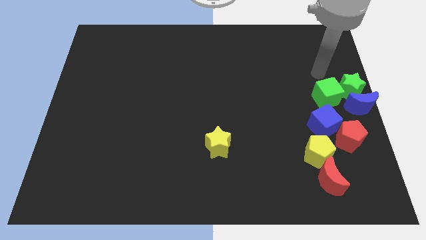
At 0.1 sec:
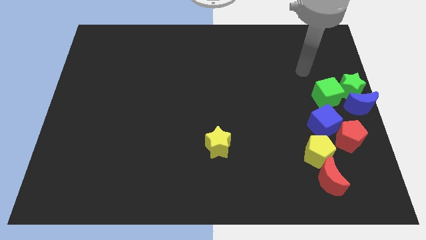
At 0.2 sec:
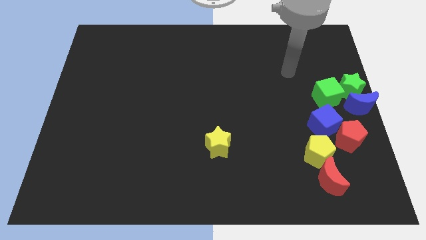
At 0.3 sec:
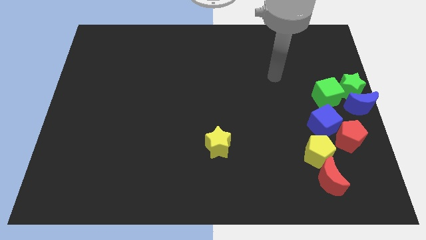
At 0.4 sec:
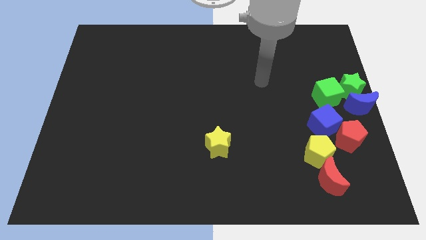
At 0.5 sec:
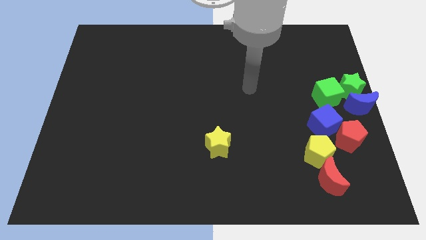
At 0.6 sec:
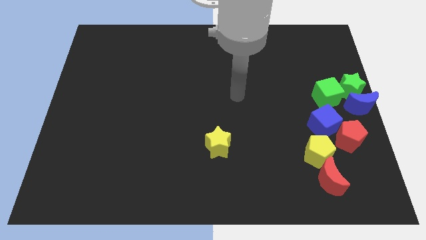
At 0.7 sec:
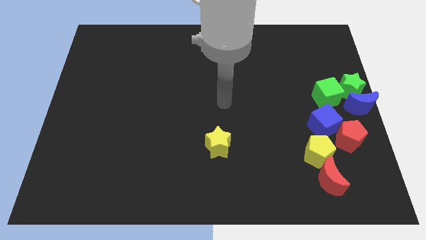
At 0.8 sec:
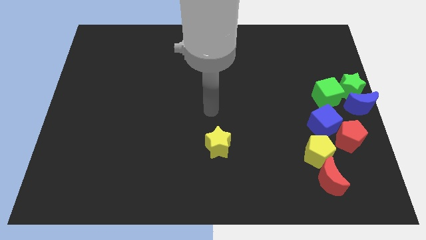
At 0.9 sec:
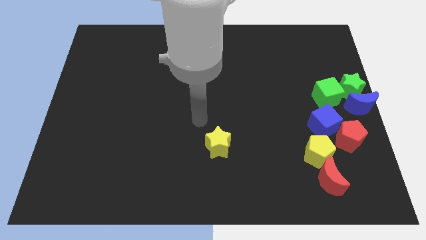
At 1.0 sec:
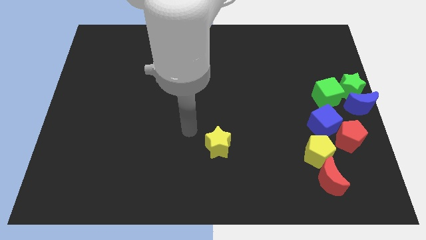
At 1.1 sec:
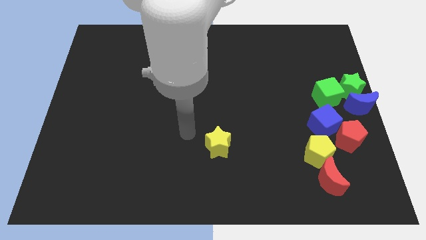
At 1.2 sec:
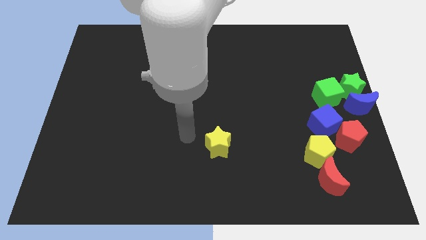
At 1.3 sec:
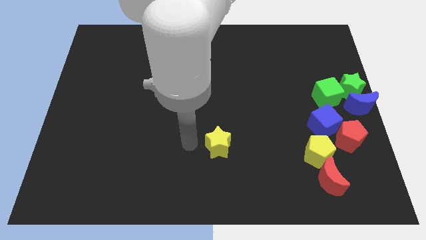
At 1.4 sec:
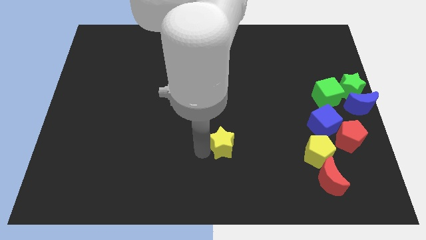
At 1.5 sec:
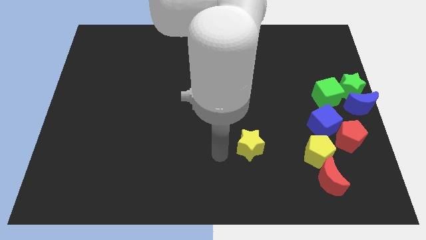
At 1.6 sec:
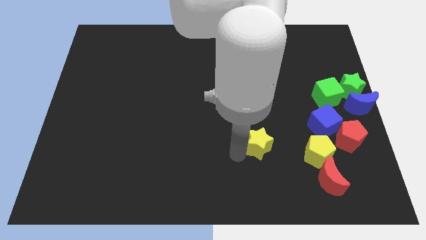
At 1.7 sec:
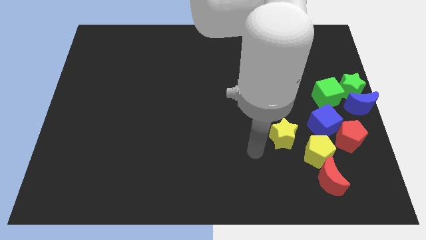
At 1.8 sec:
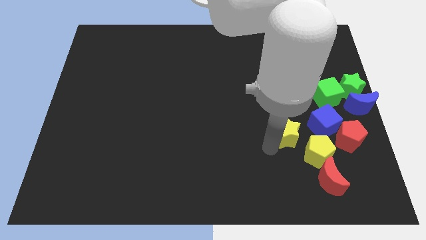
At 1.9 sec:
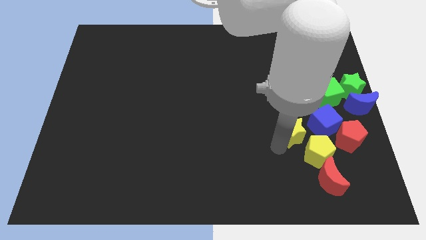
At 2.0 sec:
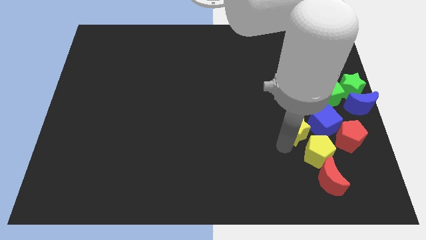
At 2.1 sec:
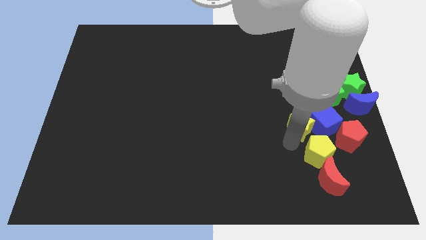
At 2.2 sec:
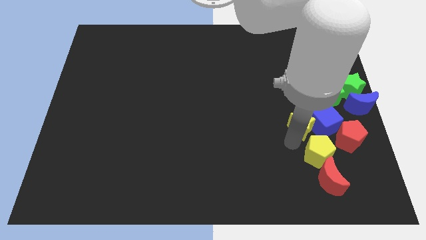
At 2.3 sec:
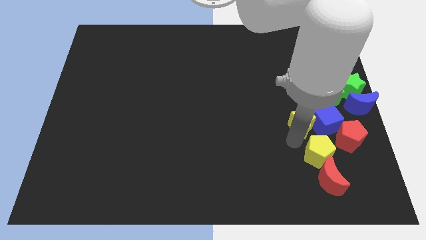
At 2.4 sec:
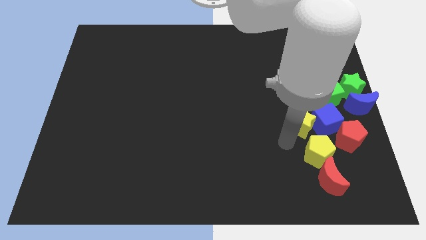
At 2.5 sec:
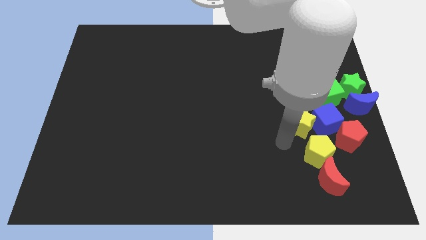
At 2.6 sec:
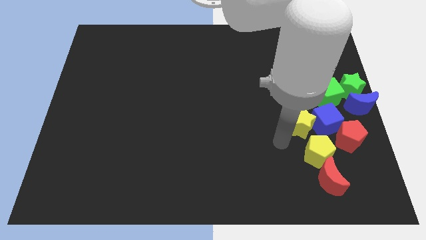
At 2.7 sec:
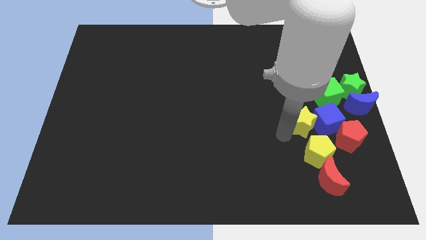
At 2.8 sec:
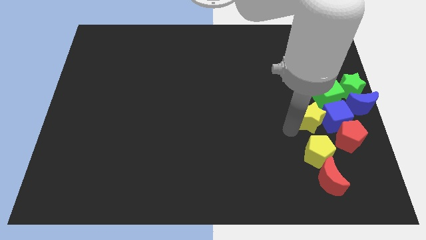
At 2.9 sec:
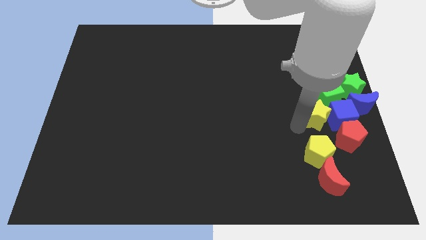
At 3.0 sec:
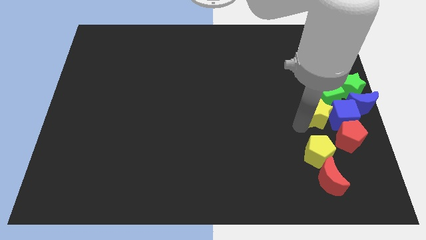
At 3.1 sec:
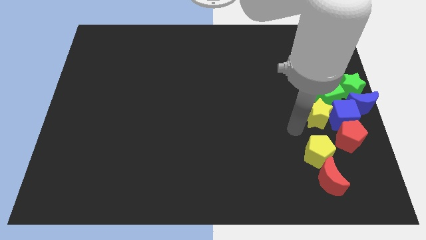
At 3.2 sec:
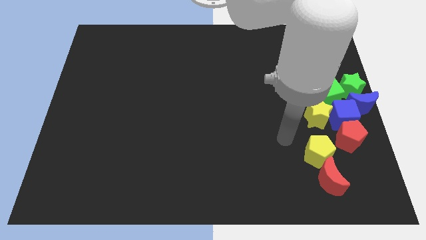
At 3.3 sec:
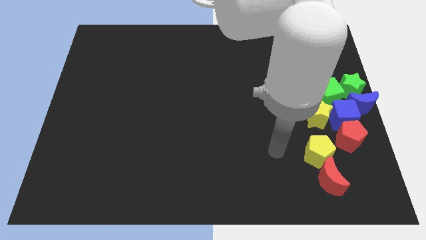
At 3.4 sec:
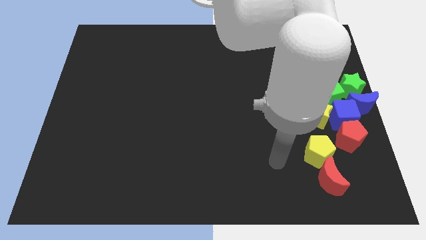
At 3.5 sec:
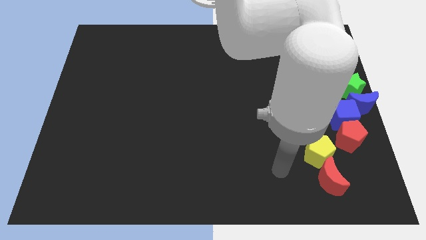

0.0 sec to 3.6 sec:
push the yellow star into blue cube

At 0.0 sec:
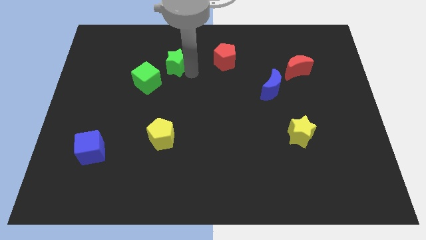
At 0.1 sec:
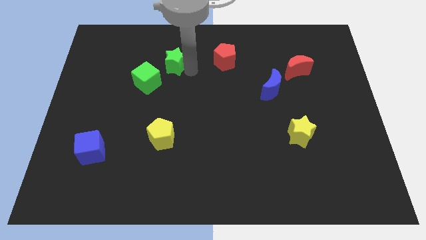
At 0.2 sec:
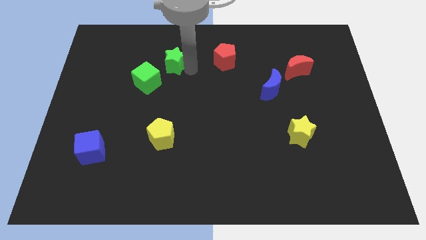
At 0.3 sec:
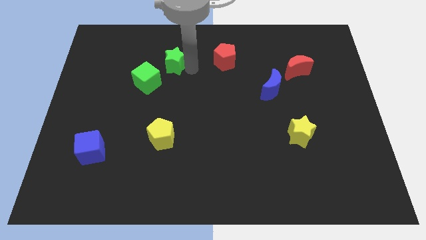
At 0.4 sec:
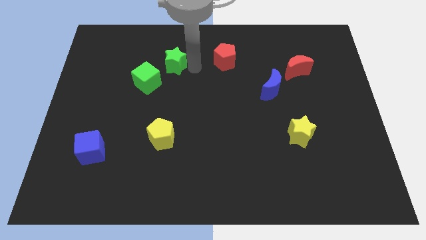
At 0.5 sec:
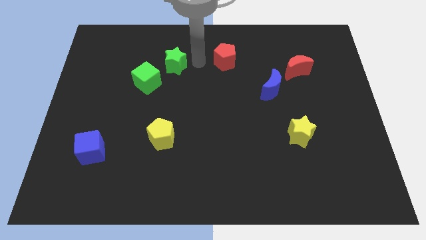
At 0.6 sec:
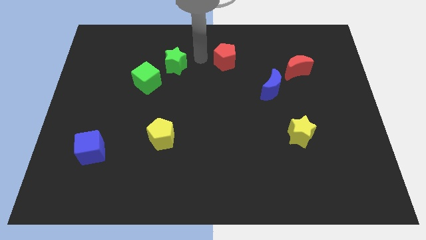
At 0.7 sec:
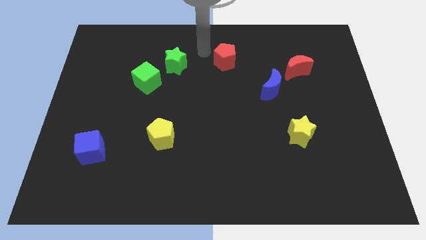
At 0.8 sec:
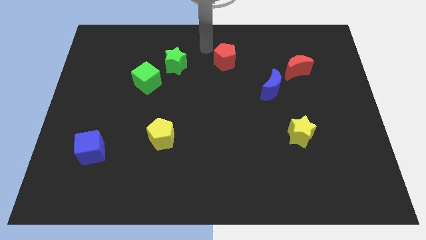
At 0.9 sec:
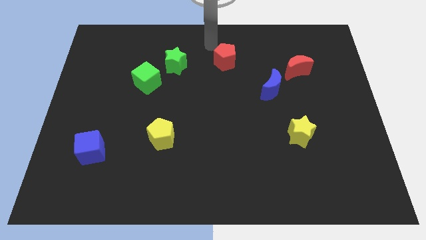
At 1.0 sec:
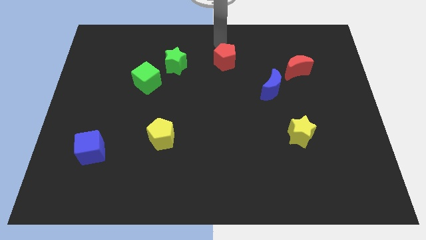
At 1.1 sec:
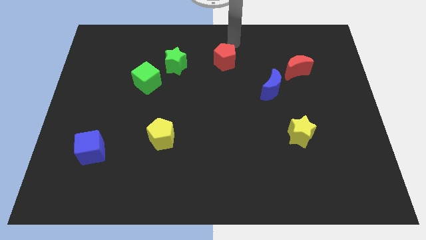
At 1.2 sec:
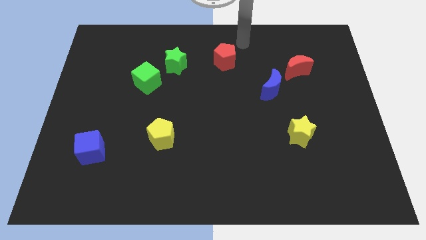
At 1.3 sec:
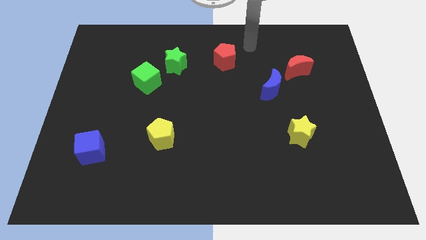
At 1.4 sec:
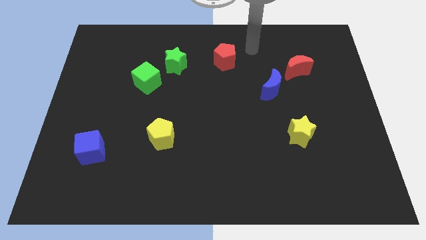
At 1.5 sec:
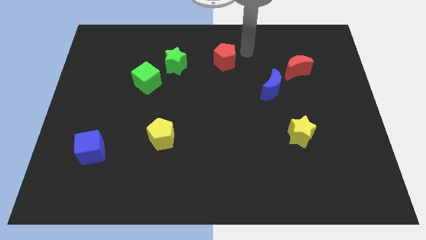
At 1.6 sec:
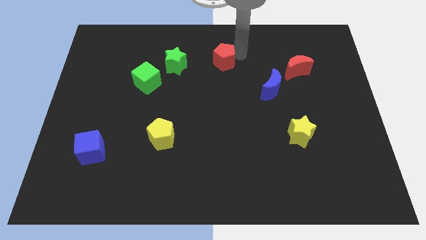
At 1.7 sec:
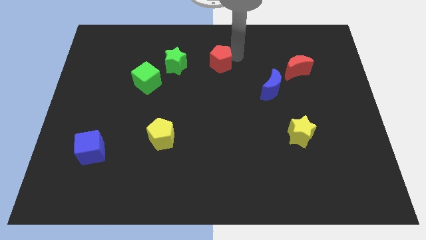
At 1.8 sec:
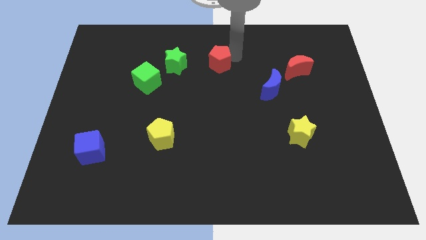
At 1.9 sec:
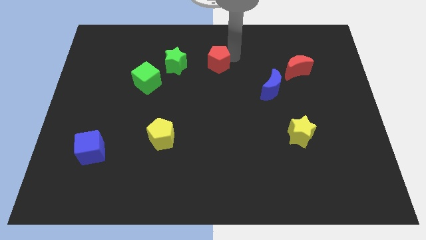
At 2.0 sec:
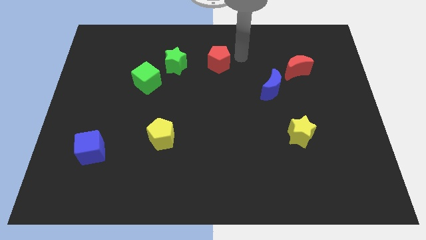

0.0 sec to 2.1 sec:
push red pentagon slightly towards down

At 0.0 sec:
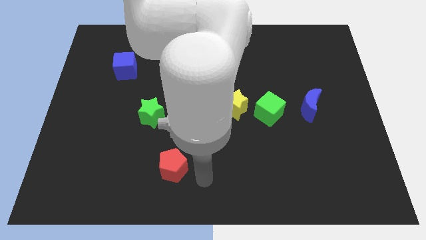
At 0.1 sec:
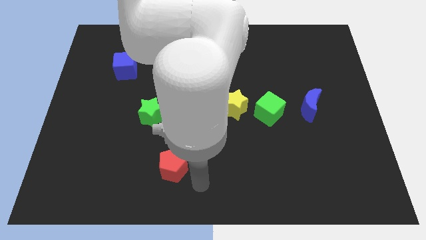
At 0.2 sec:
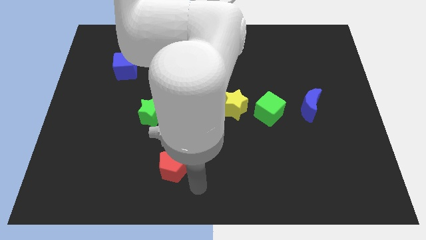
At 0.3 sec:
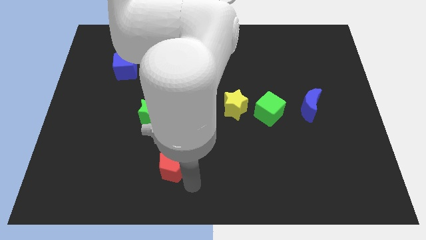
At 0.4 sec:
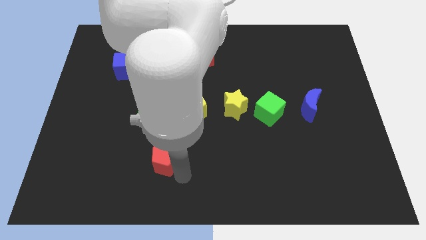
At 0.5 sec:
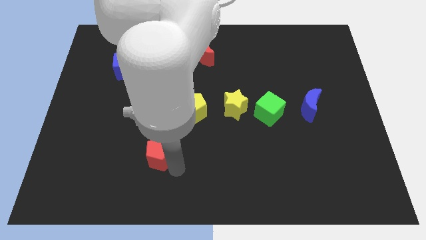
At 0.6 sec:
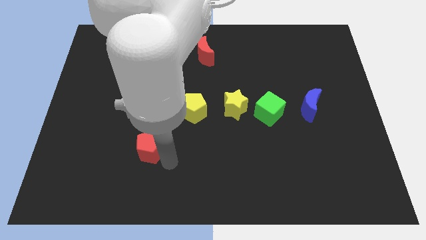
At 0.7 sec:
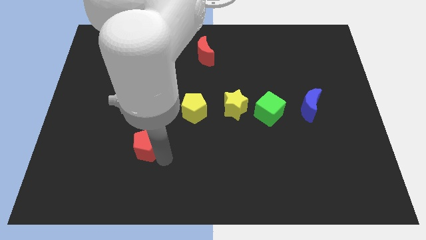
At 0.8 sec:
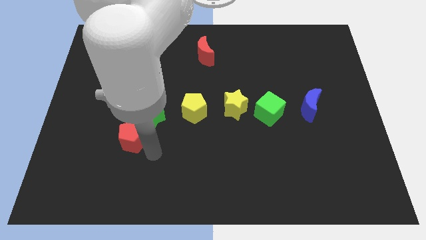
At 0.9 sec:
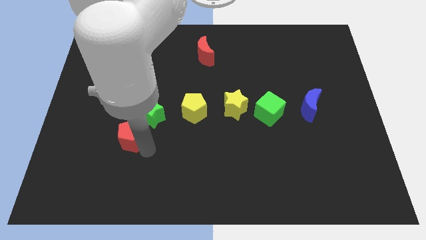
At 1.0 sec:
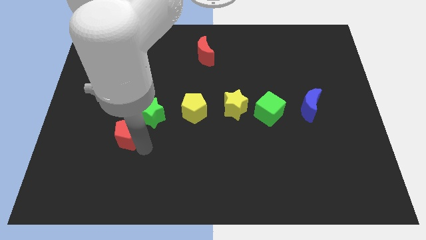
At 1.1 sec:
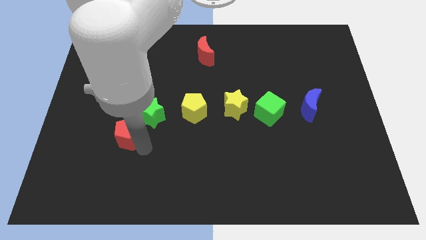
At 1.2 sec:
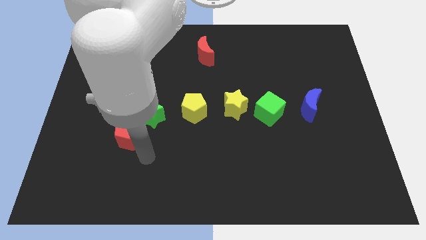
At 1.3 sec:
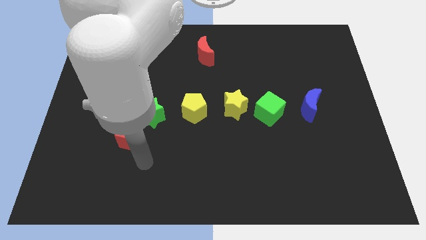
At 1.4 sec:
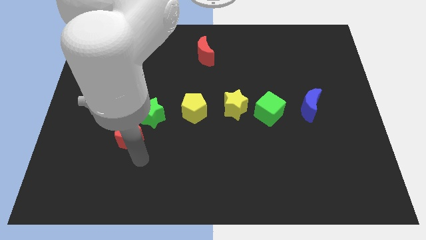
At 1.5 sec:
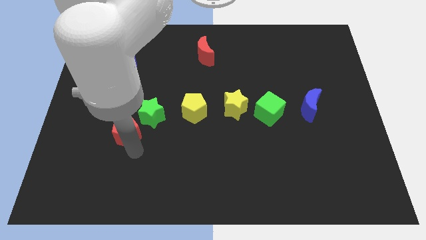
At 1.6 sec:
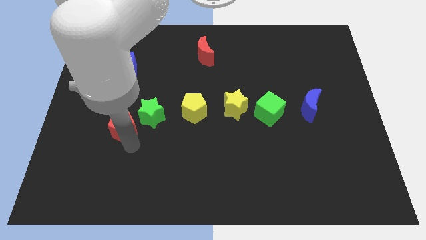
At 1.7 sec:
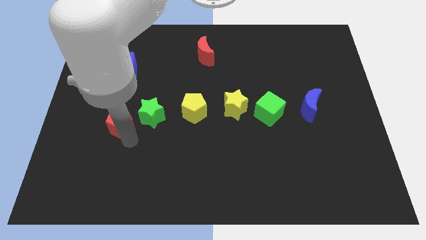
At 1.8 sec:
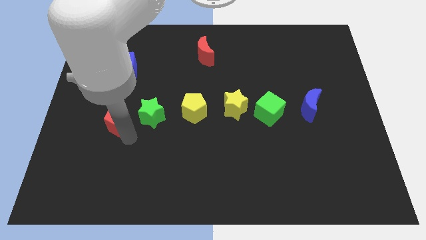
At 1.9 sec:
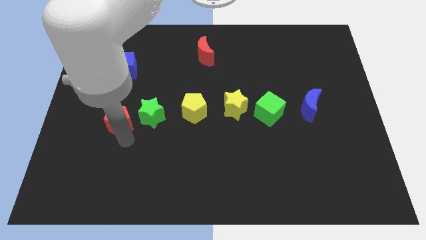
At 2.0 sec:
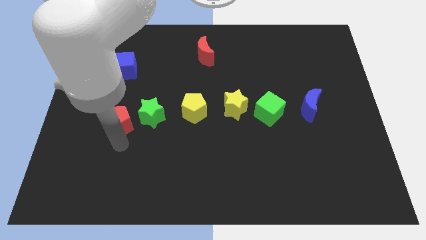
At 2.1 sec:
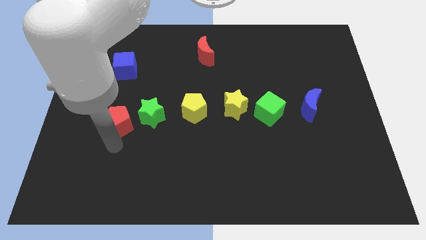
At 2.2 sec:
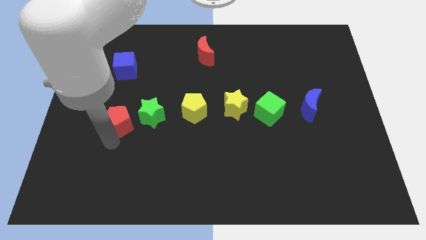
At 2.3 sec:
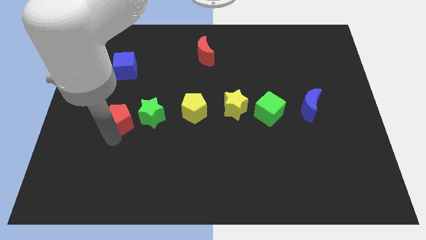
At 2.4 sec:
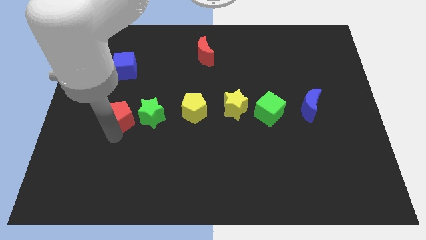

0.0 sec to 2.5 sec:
move the red pentagon to the left of the green star

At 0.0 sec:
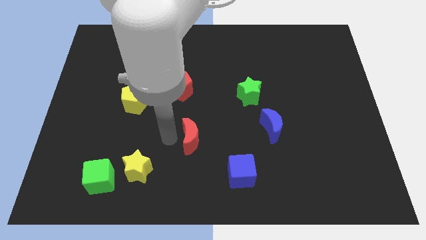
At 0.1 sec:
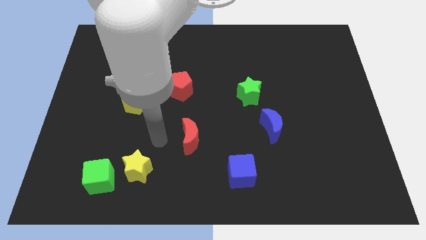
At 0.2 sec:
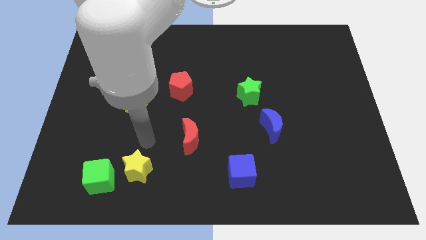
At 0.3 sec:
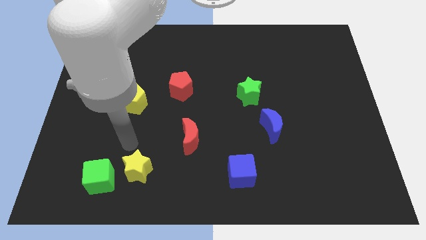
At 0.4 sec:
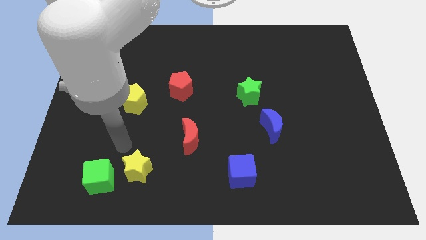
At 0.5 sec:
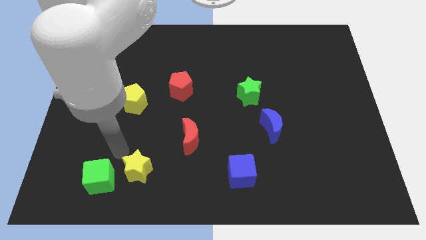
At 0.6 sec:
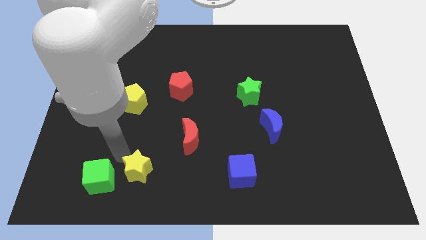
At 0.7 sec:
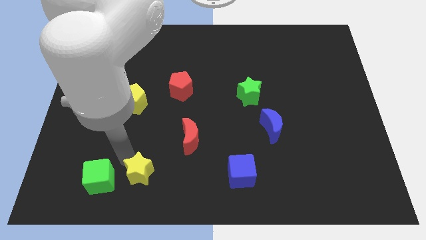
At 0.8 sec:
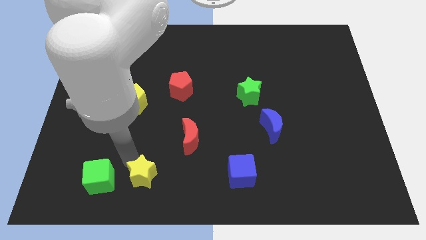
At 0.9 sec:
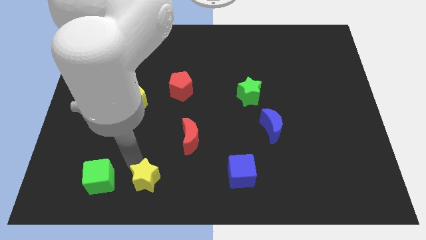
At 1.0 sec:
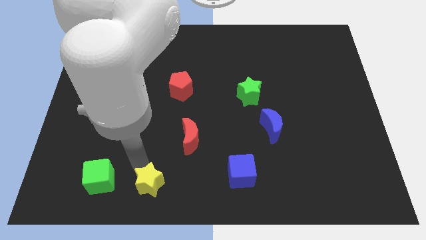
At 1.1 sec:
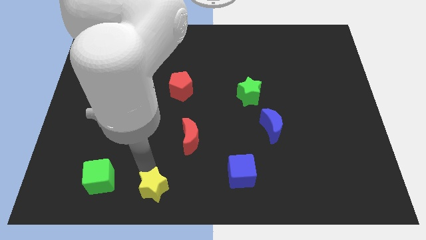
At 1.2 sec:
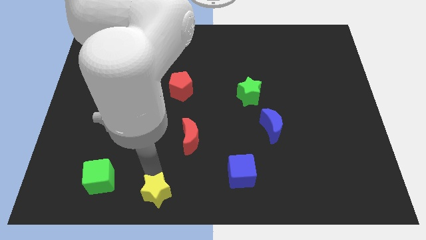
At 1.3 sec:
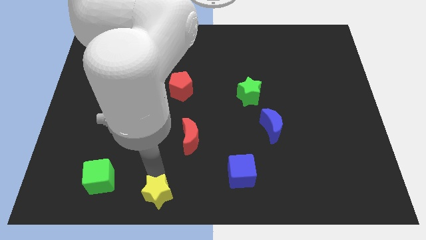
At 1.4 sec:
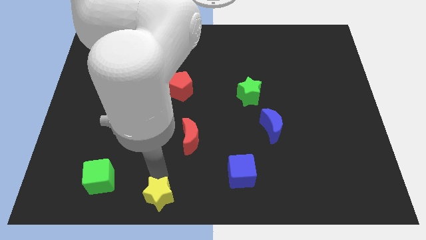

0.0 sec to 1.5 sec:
push the yellow star towards the bottom center of the board
